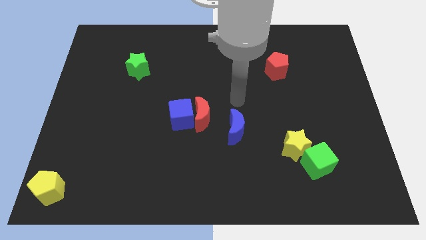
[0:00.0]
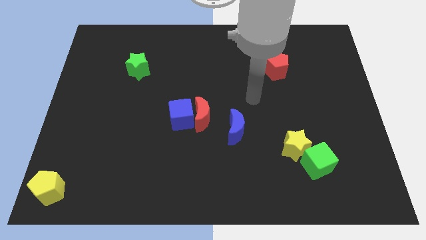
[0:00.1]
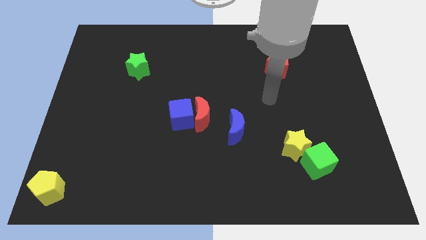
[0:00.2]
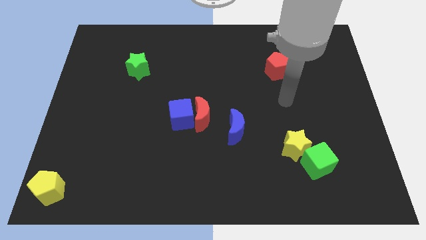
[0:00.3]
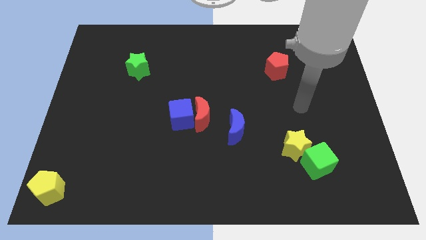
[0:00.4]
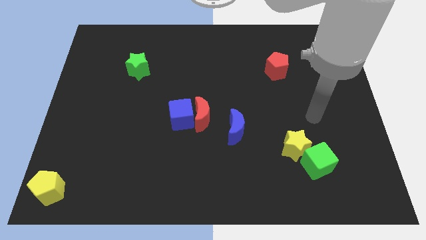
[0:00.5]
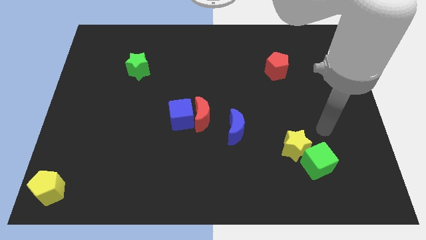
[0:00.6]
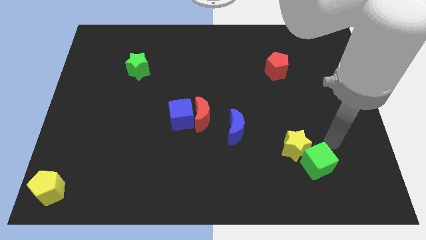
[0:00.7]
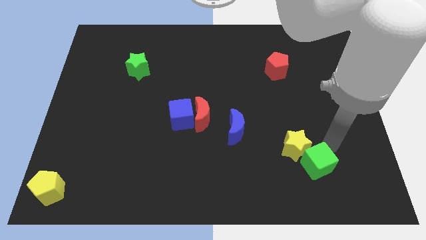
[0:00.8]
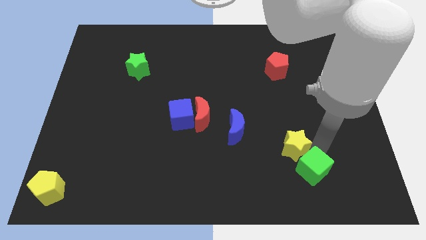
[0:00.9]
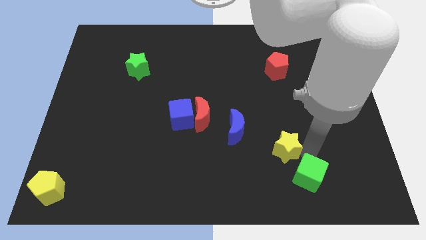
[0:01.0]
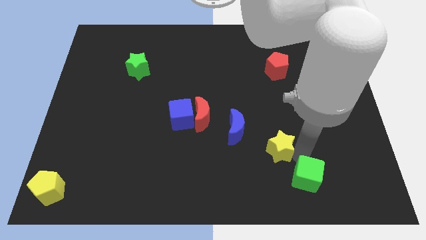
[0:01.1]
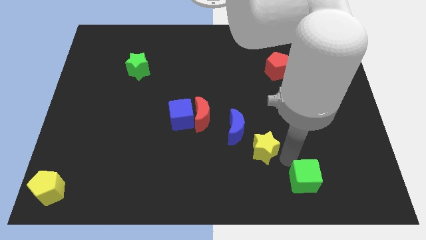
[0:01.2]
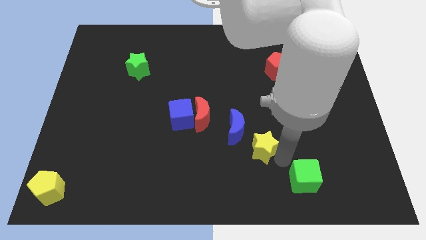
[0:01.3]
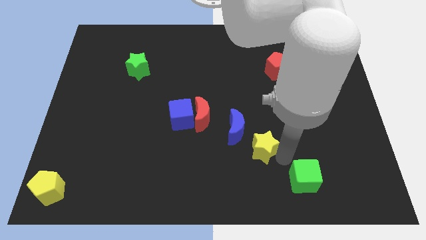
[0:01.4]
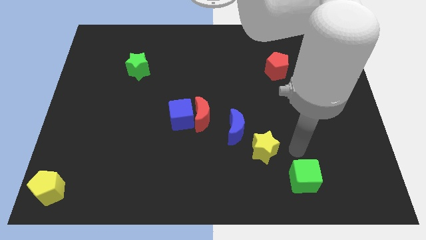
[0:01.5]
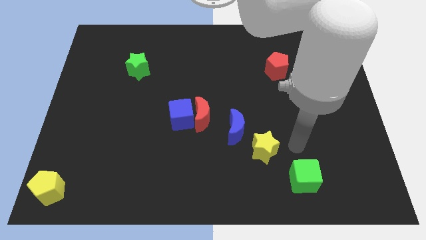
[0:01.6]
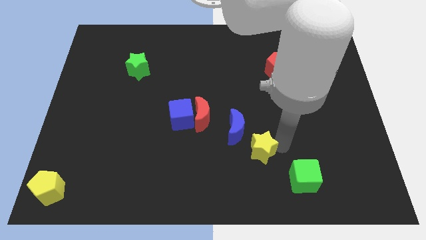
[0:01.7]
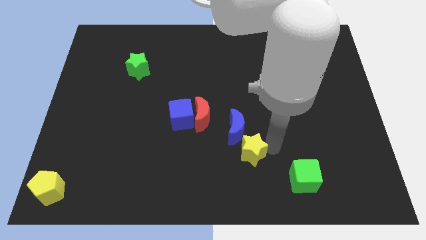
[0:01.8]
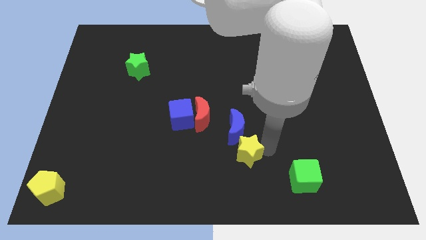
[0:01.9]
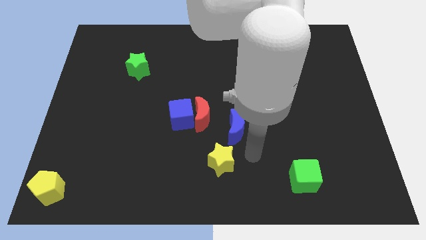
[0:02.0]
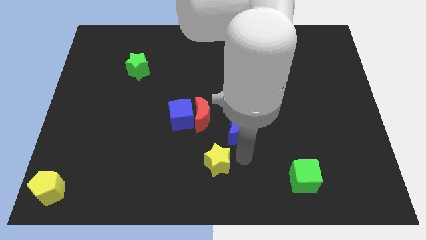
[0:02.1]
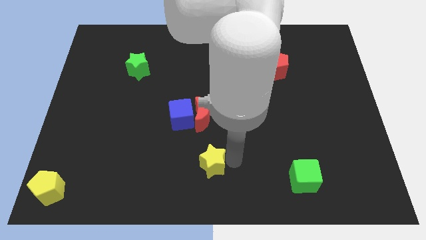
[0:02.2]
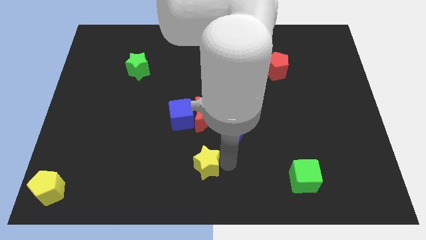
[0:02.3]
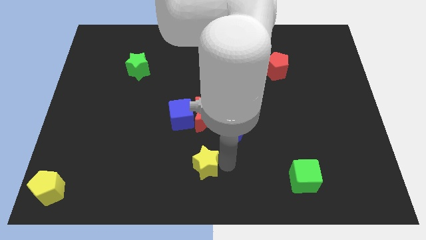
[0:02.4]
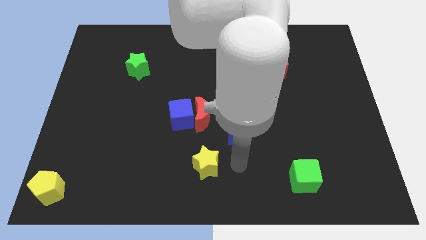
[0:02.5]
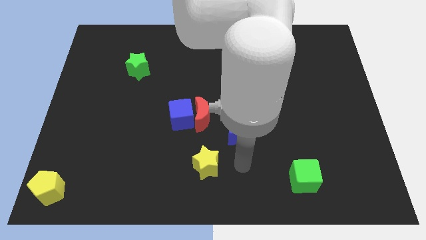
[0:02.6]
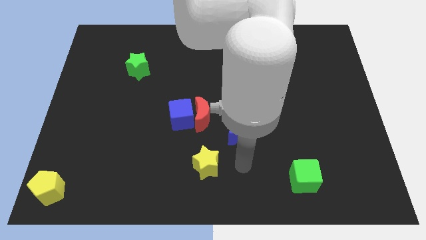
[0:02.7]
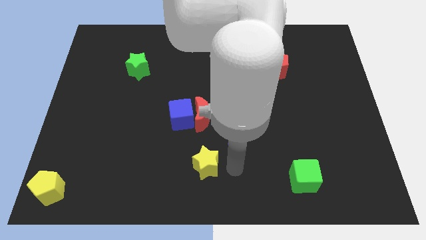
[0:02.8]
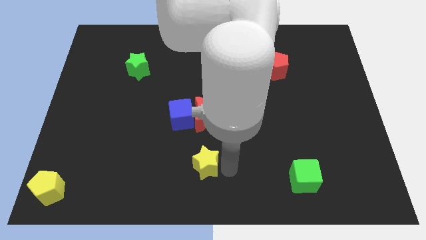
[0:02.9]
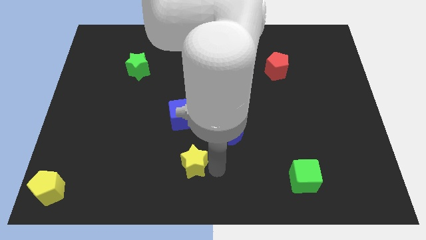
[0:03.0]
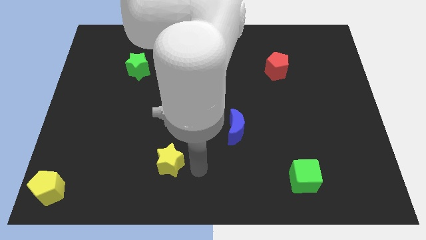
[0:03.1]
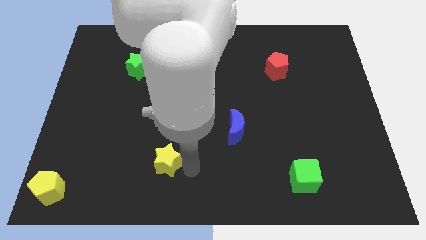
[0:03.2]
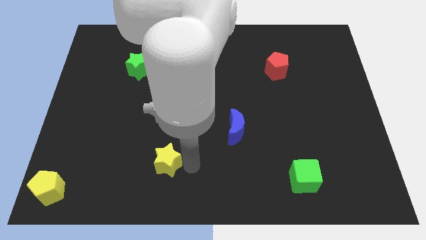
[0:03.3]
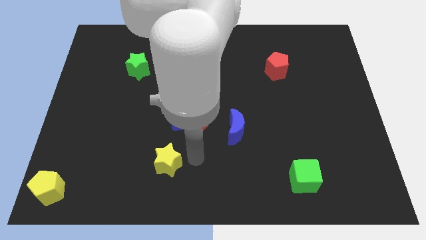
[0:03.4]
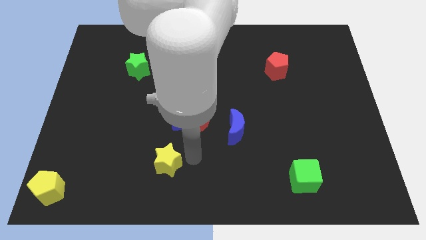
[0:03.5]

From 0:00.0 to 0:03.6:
push the yellow star to the left of the board

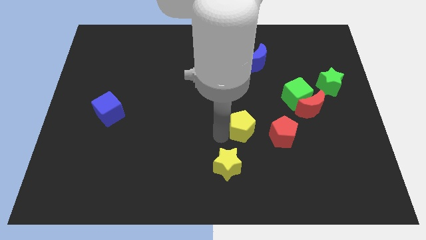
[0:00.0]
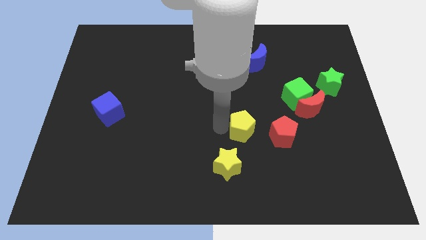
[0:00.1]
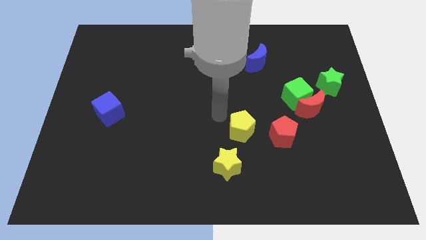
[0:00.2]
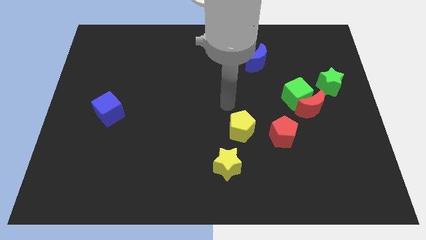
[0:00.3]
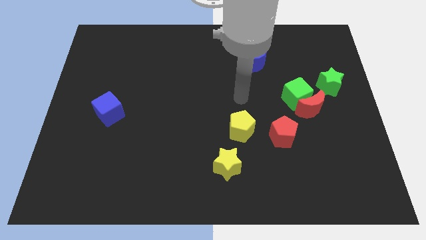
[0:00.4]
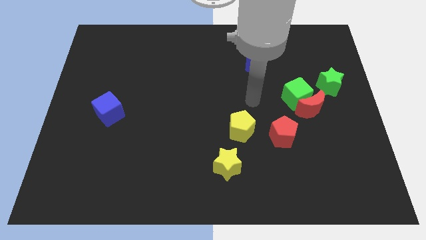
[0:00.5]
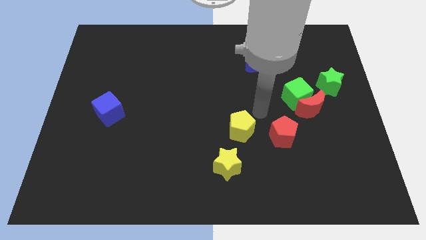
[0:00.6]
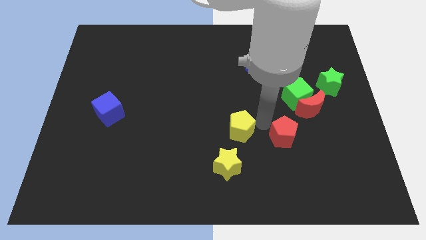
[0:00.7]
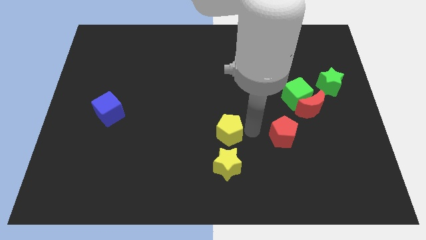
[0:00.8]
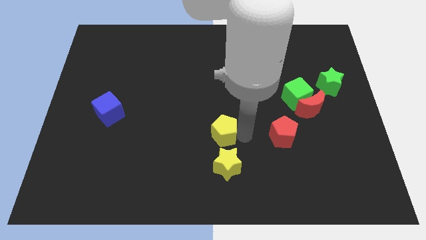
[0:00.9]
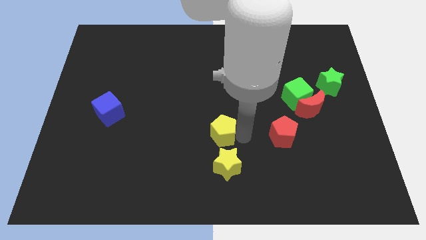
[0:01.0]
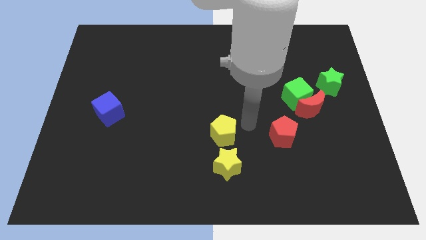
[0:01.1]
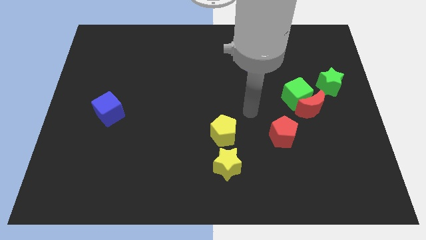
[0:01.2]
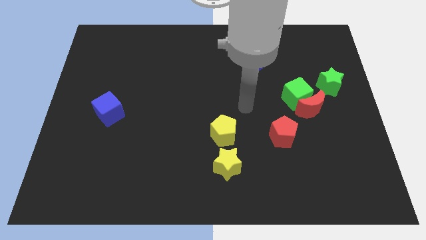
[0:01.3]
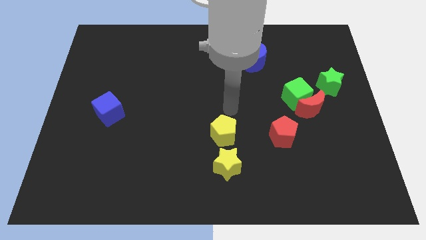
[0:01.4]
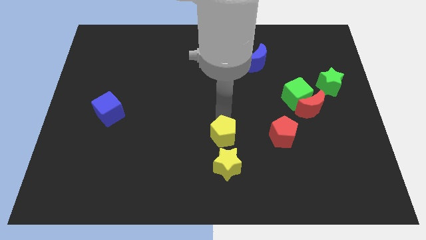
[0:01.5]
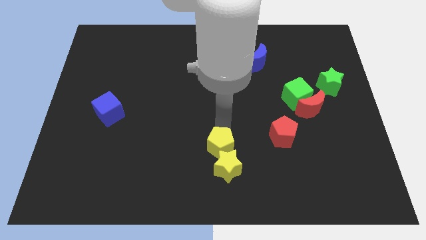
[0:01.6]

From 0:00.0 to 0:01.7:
push the yellow pentagon above the yellow star

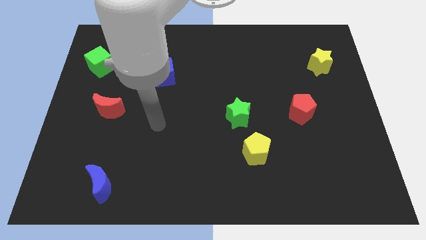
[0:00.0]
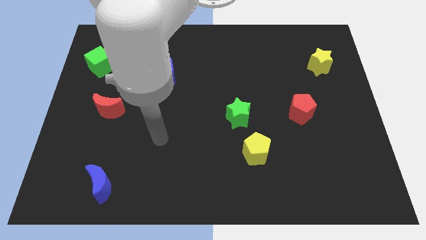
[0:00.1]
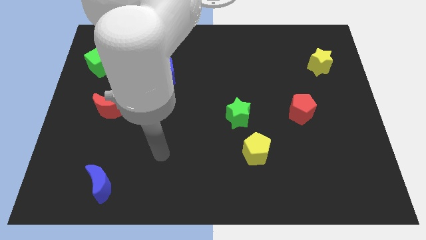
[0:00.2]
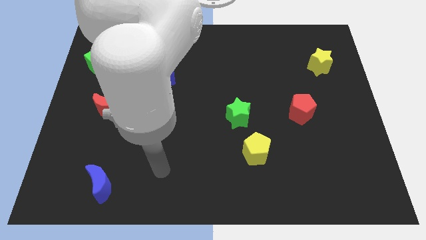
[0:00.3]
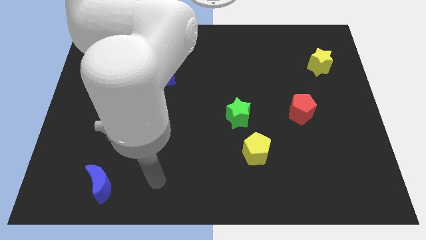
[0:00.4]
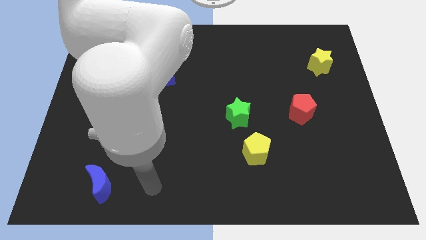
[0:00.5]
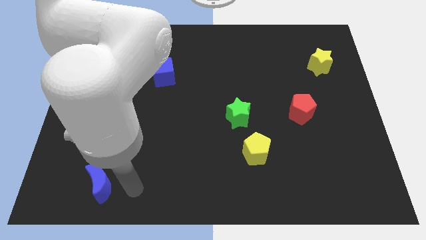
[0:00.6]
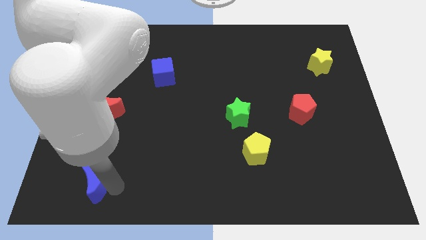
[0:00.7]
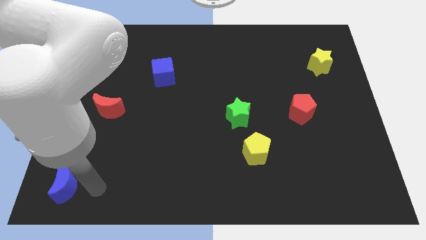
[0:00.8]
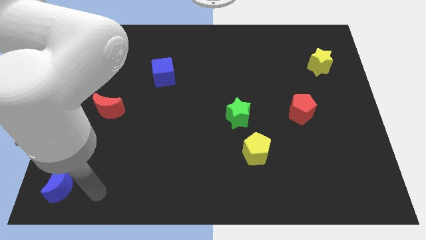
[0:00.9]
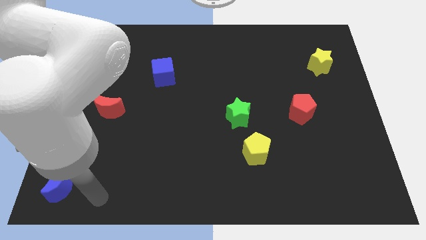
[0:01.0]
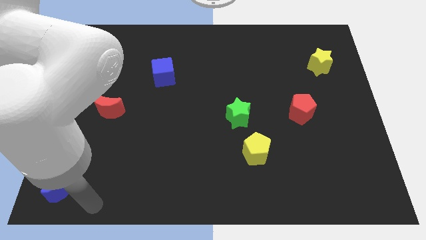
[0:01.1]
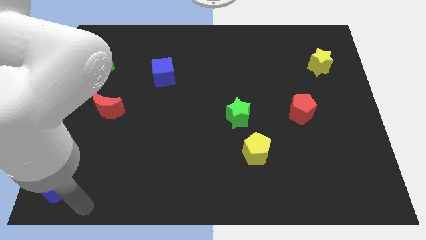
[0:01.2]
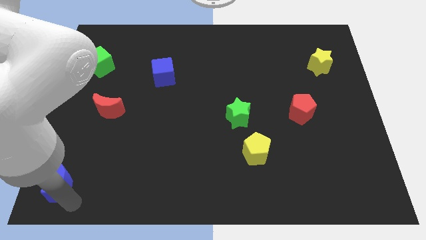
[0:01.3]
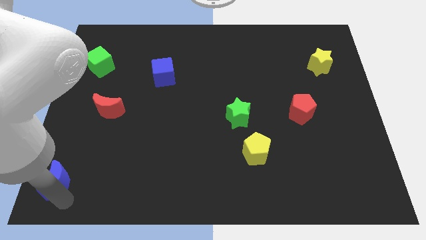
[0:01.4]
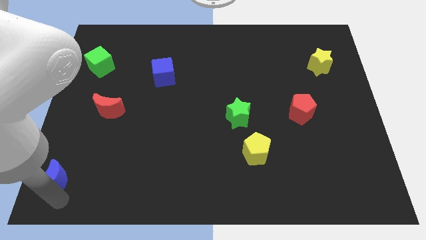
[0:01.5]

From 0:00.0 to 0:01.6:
place the blue crescent at the bottom left corner of the board

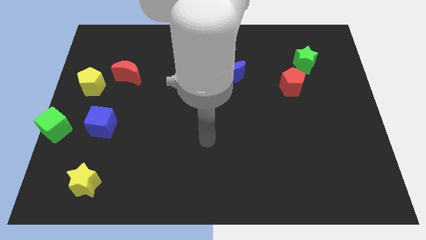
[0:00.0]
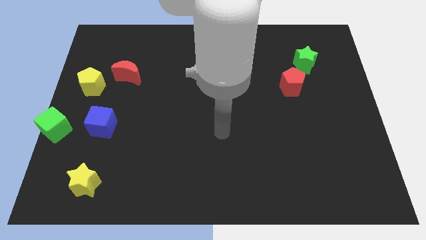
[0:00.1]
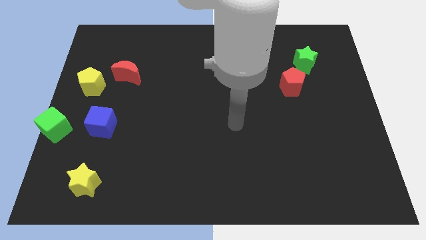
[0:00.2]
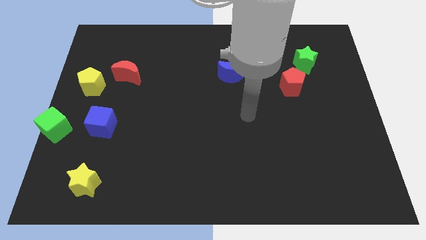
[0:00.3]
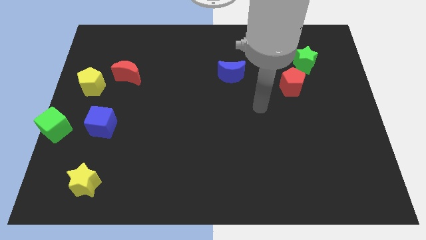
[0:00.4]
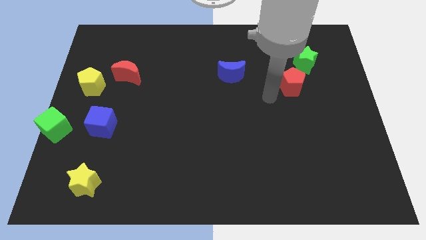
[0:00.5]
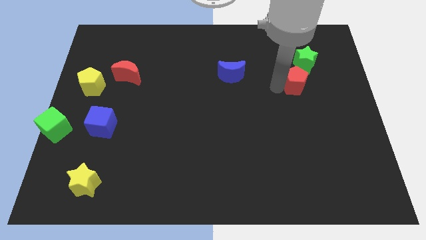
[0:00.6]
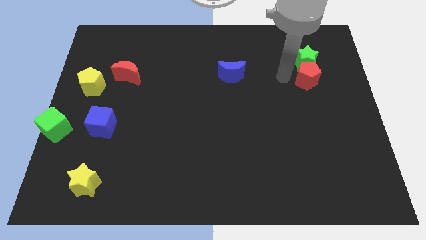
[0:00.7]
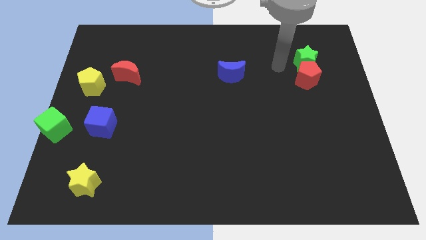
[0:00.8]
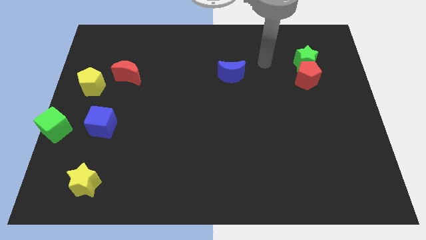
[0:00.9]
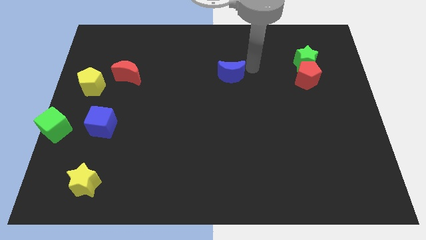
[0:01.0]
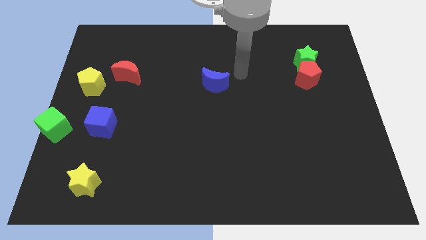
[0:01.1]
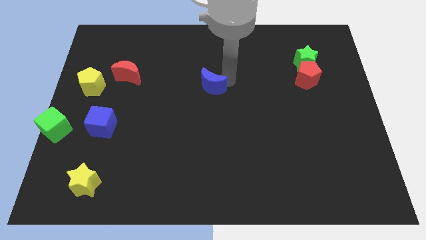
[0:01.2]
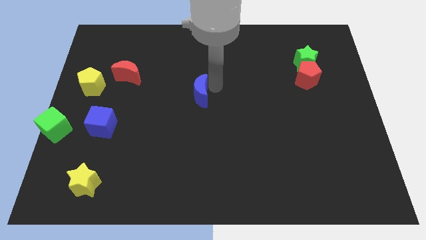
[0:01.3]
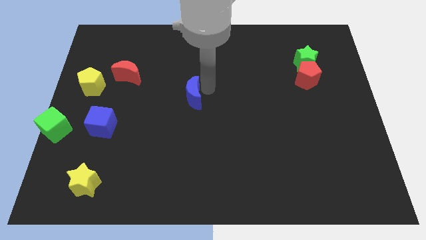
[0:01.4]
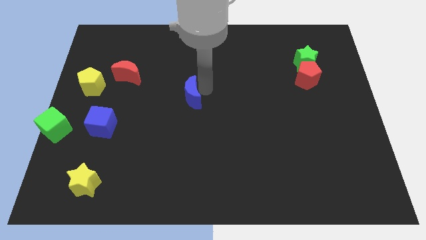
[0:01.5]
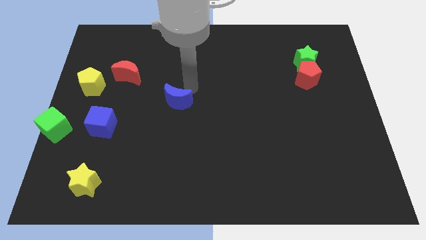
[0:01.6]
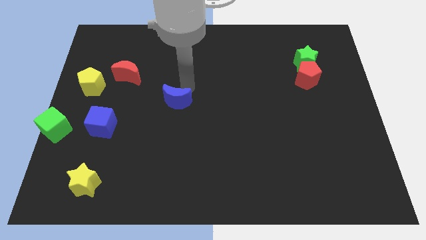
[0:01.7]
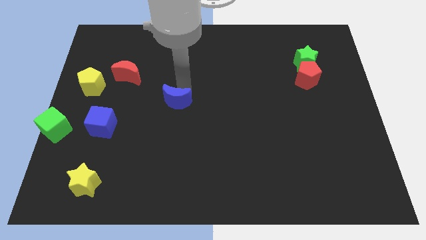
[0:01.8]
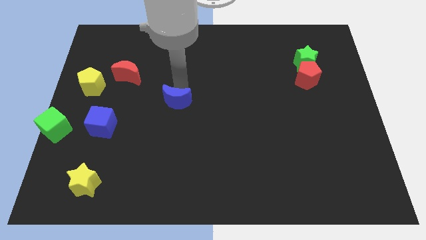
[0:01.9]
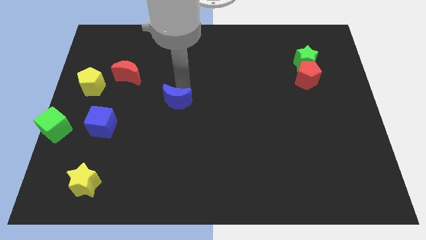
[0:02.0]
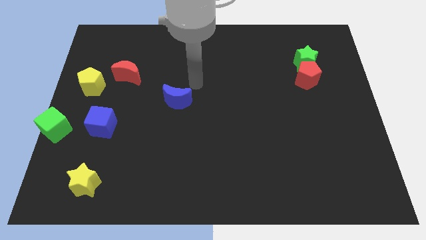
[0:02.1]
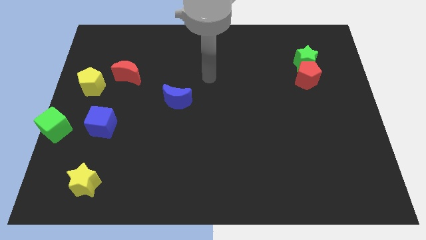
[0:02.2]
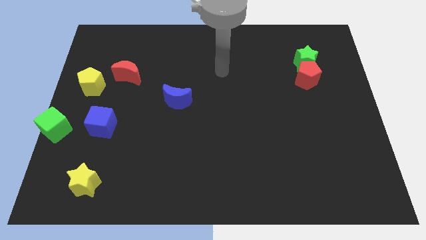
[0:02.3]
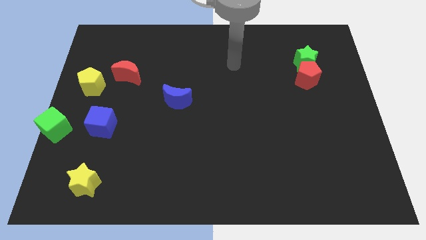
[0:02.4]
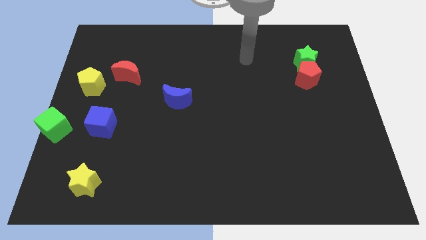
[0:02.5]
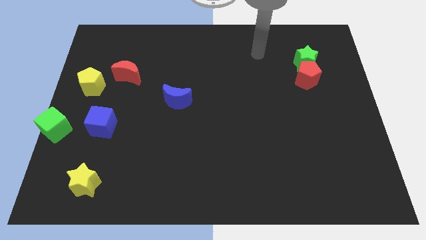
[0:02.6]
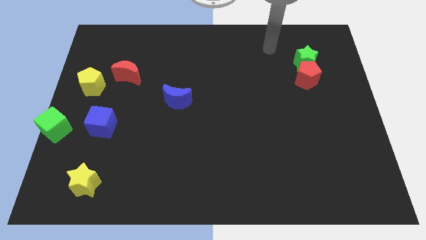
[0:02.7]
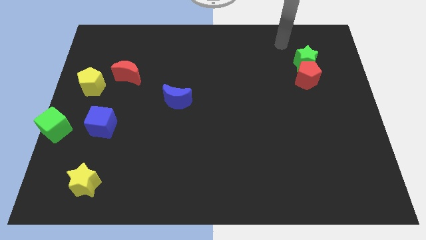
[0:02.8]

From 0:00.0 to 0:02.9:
place the blue moon diagonally to the blue cube
